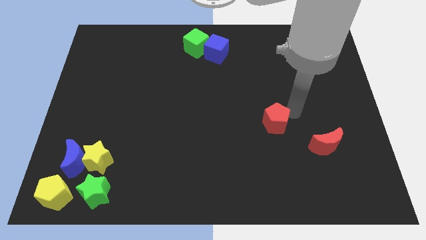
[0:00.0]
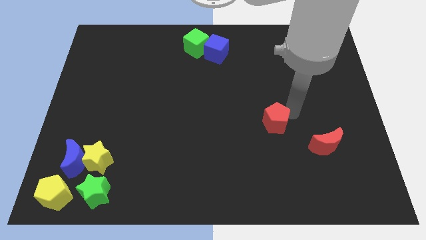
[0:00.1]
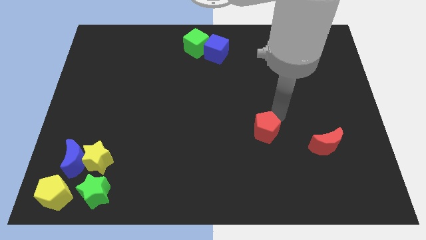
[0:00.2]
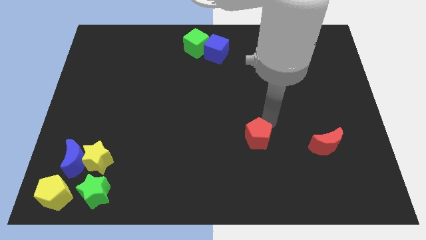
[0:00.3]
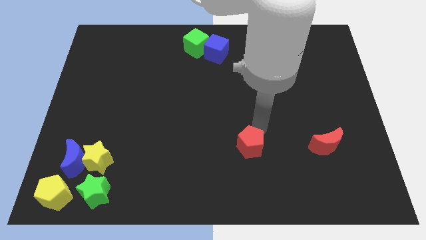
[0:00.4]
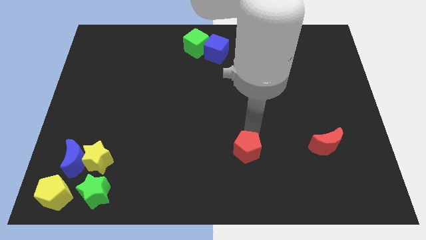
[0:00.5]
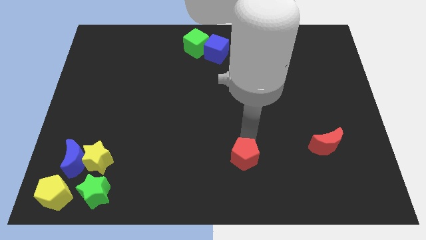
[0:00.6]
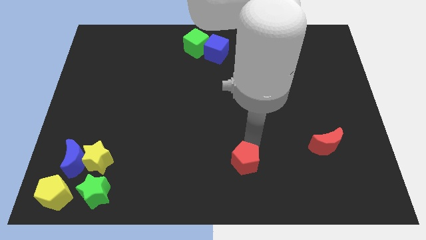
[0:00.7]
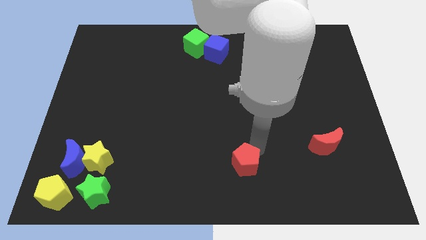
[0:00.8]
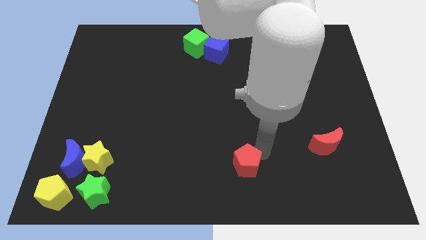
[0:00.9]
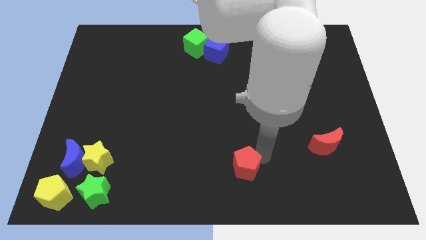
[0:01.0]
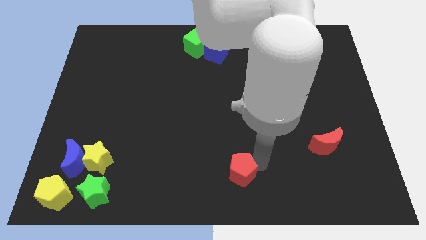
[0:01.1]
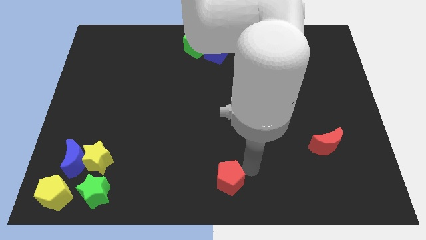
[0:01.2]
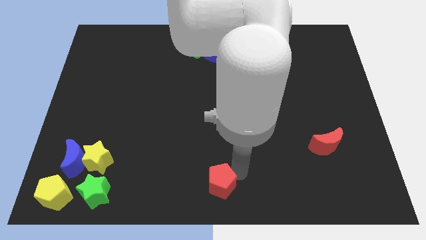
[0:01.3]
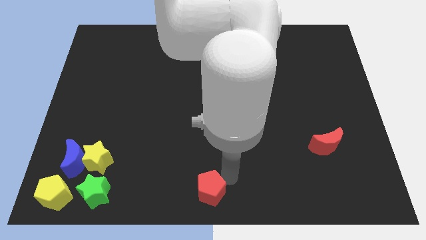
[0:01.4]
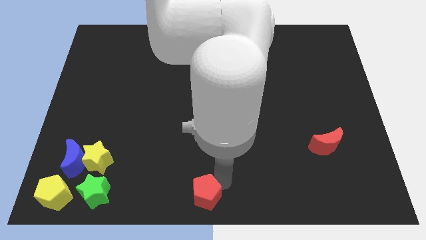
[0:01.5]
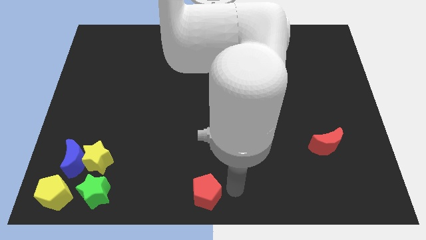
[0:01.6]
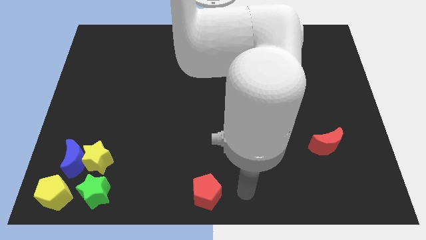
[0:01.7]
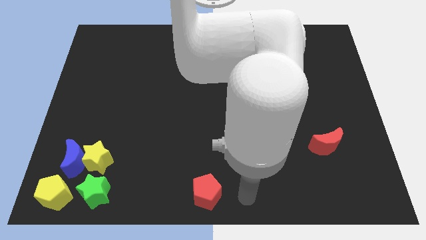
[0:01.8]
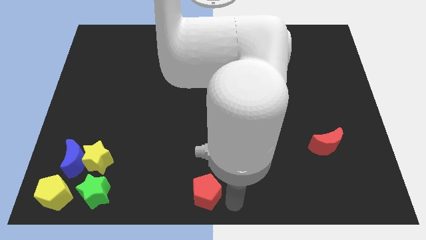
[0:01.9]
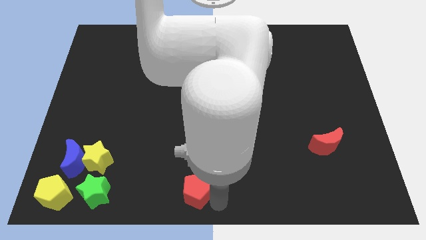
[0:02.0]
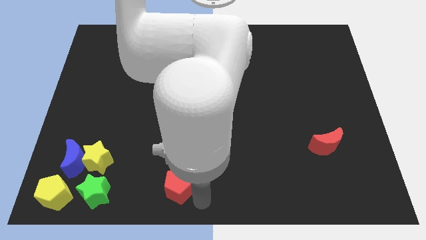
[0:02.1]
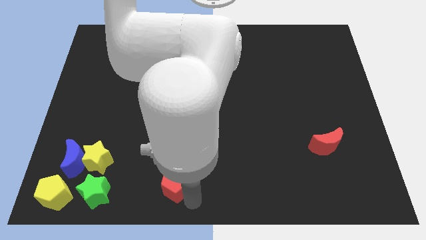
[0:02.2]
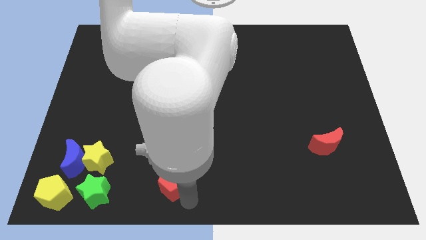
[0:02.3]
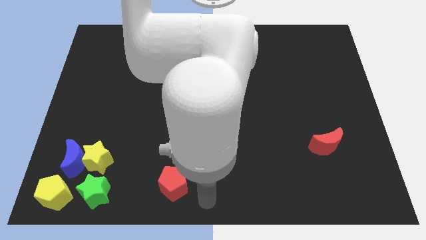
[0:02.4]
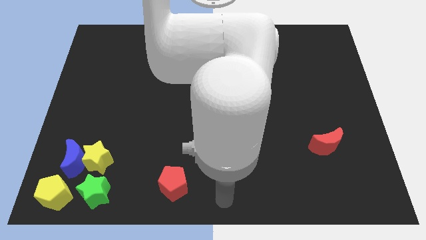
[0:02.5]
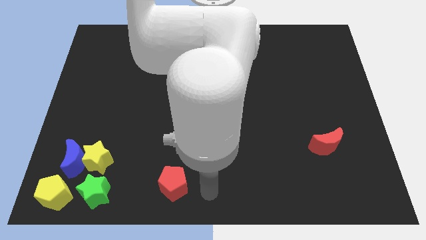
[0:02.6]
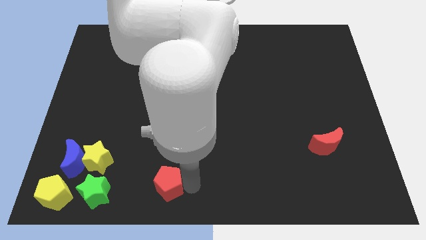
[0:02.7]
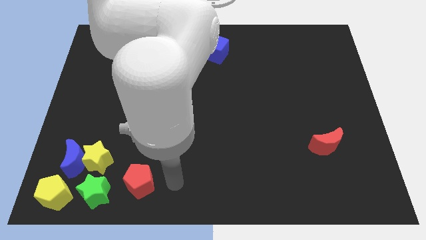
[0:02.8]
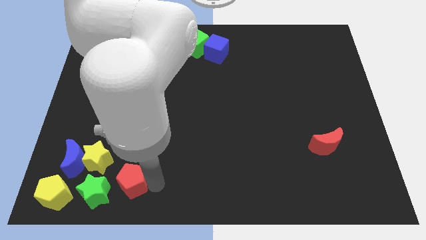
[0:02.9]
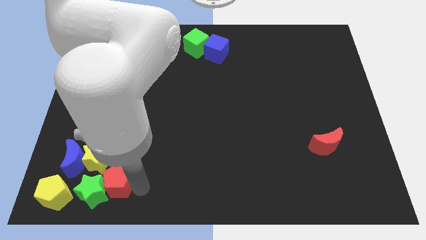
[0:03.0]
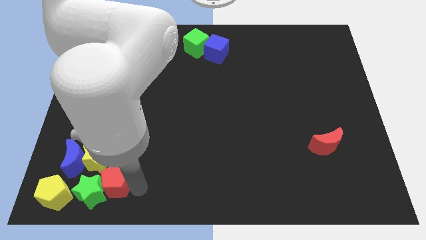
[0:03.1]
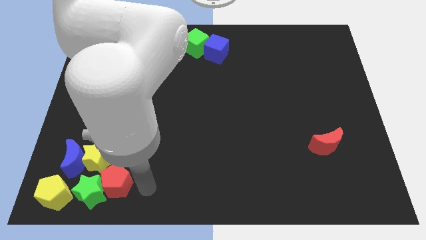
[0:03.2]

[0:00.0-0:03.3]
slide the red pentagon into the green star

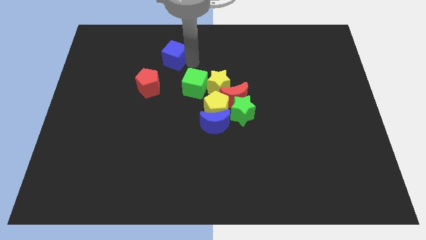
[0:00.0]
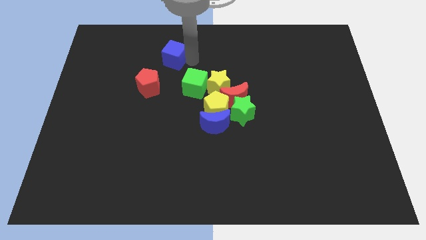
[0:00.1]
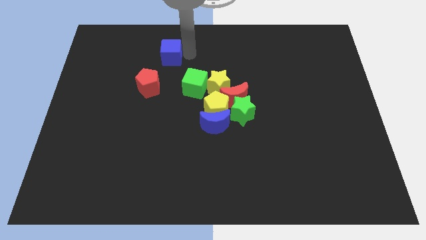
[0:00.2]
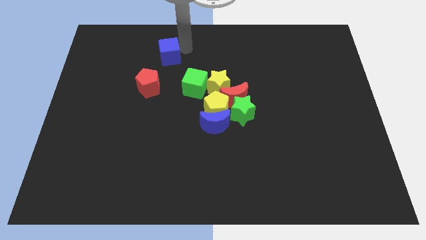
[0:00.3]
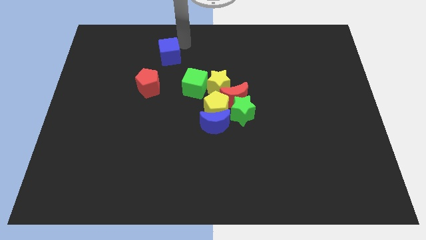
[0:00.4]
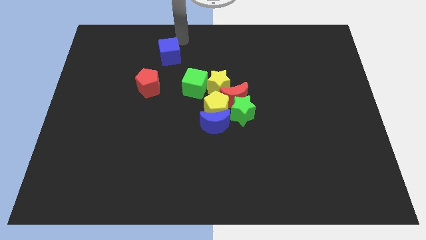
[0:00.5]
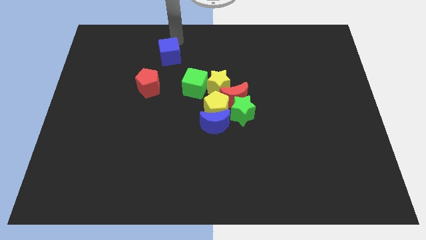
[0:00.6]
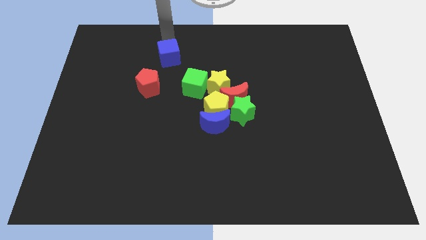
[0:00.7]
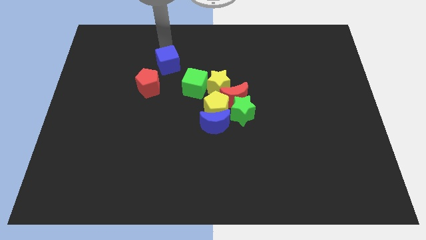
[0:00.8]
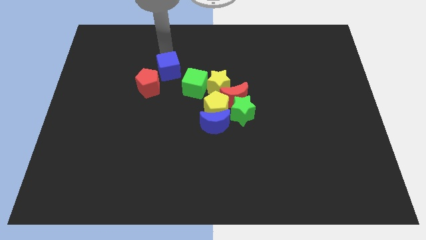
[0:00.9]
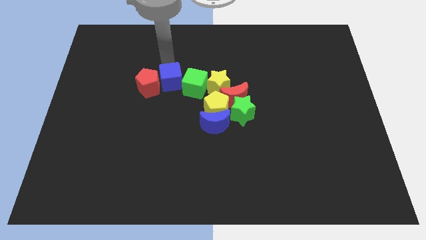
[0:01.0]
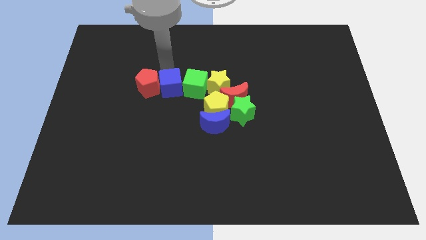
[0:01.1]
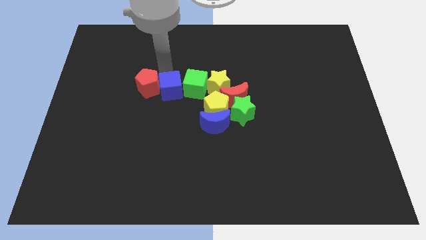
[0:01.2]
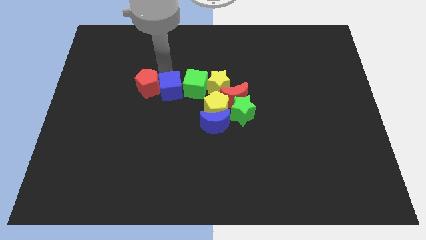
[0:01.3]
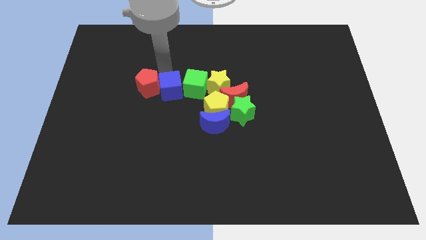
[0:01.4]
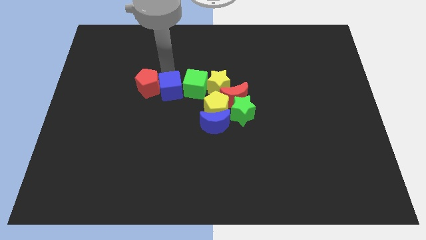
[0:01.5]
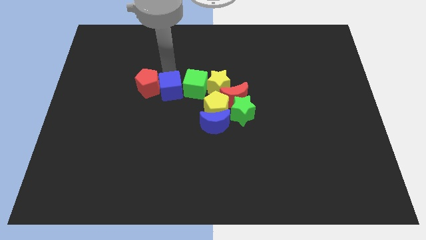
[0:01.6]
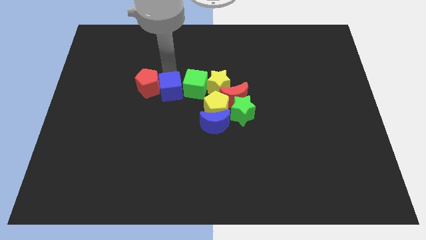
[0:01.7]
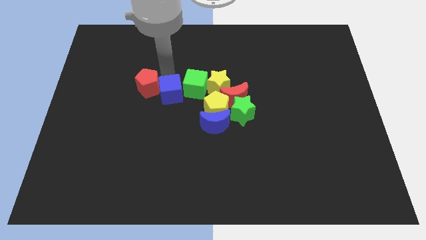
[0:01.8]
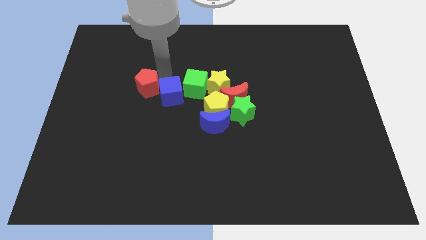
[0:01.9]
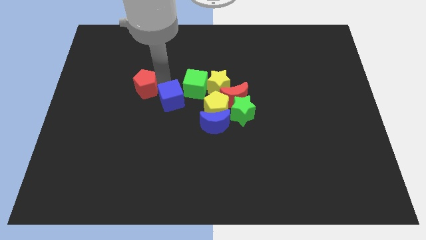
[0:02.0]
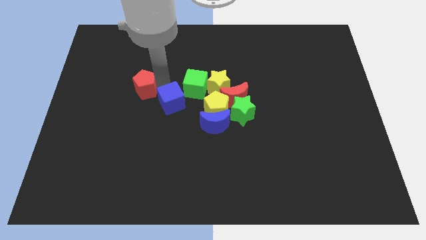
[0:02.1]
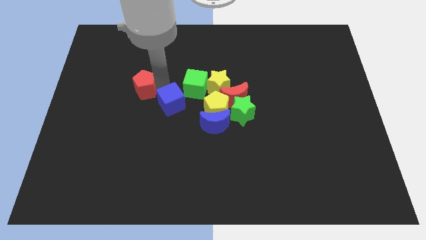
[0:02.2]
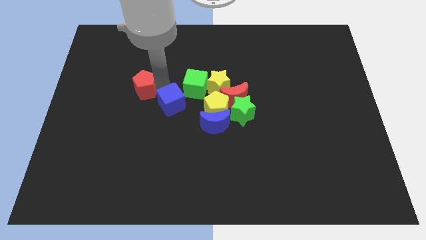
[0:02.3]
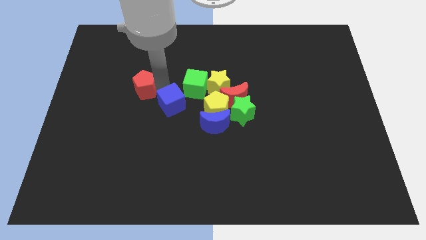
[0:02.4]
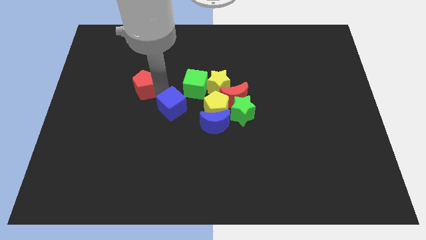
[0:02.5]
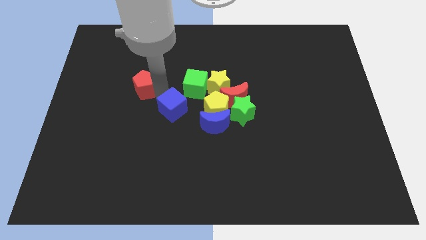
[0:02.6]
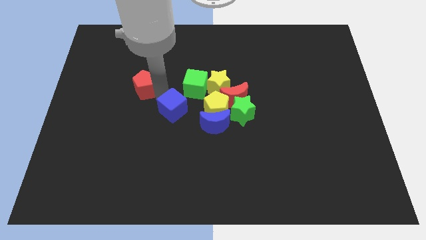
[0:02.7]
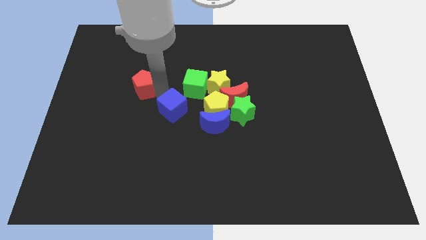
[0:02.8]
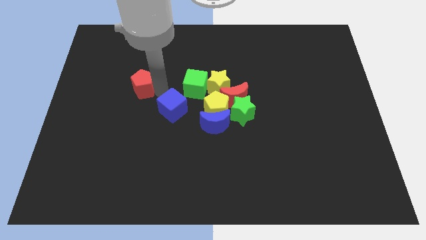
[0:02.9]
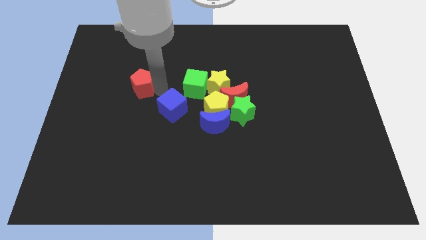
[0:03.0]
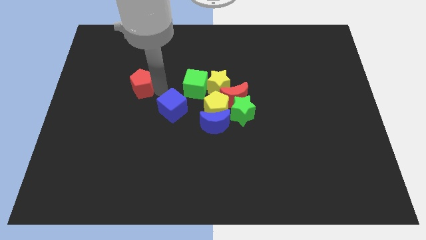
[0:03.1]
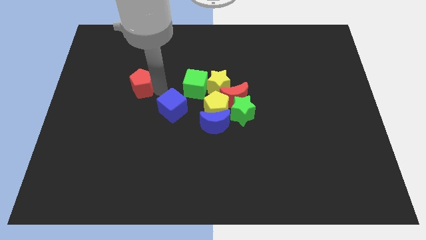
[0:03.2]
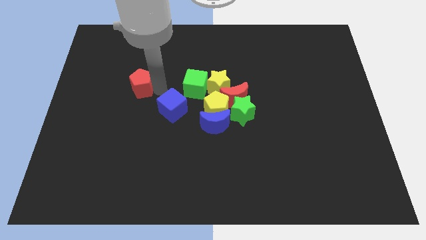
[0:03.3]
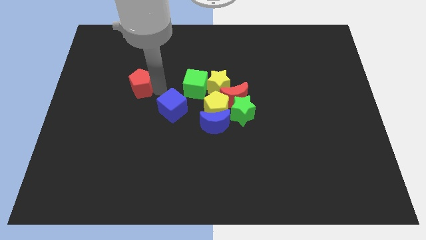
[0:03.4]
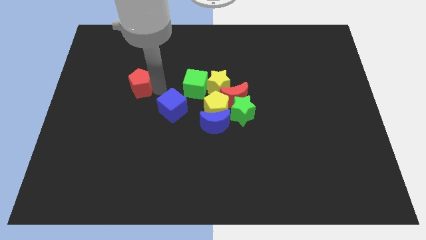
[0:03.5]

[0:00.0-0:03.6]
move blue cube to the diagonal bottom left of the green cube

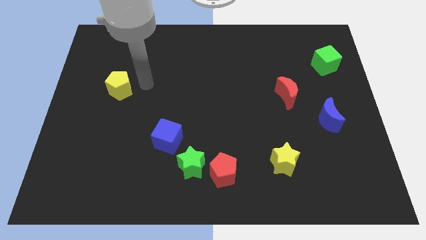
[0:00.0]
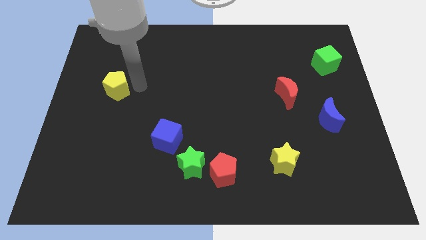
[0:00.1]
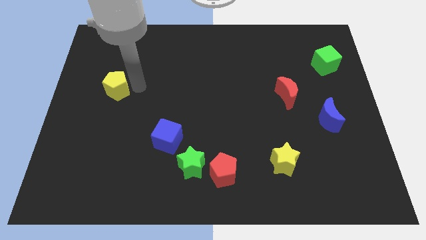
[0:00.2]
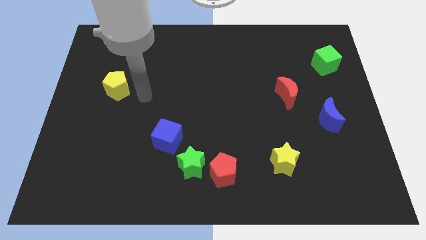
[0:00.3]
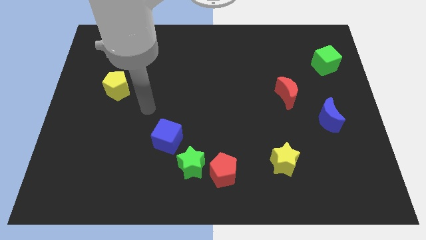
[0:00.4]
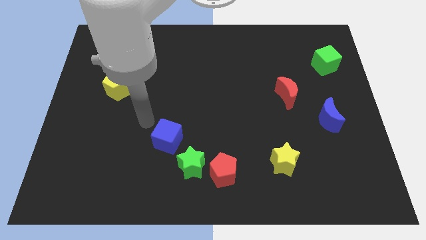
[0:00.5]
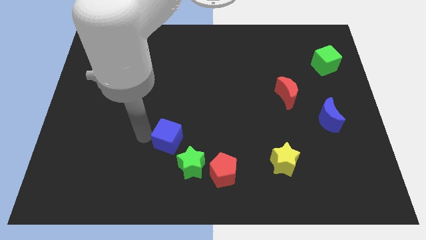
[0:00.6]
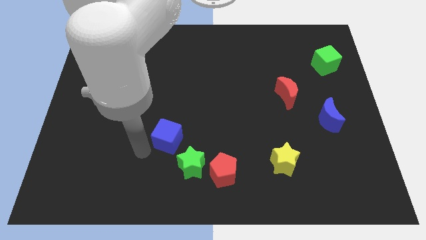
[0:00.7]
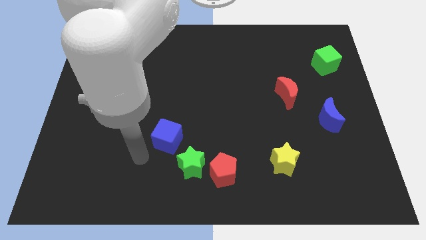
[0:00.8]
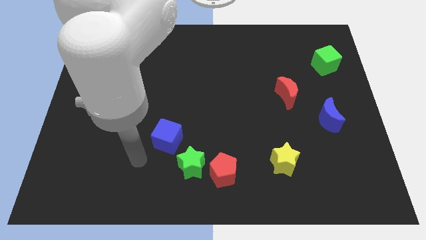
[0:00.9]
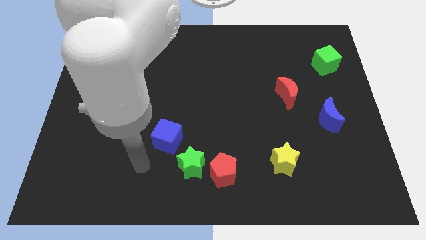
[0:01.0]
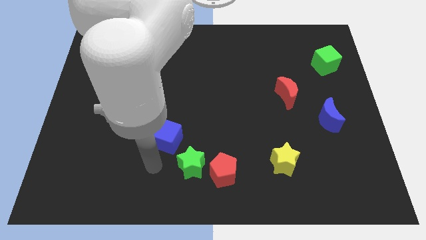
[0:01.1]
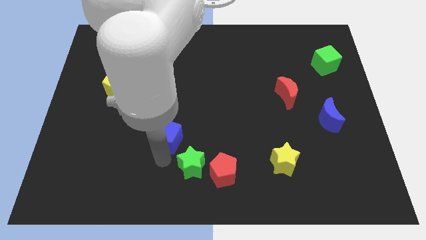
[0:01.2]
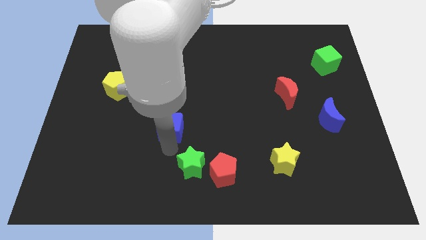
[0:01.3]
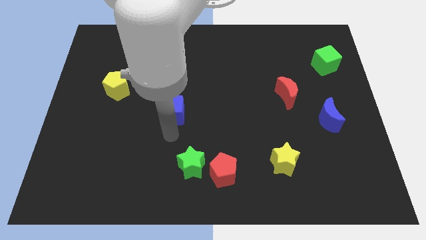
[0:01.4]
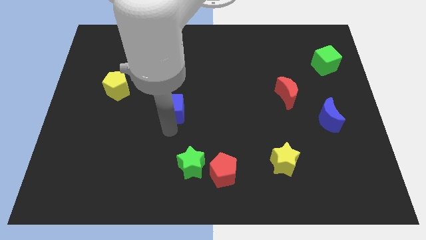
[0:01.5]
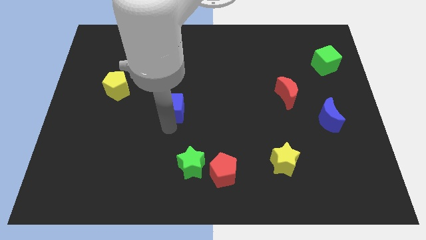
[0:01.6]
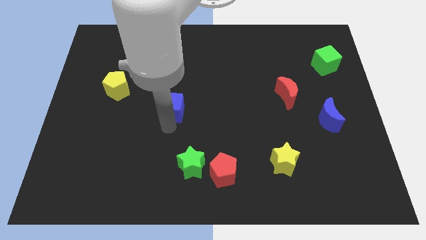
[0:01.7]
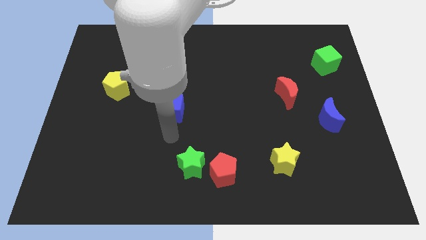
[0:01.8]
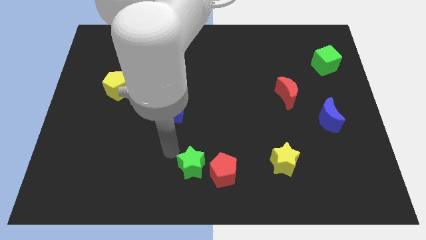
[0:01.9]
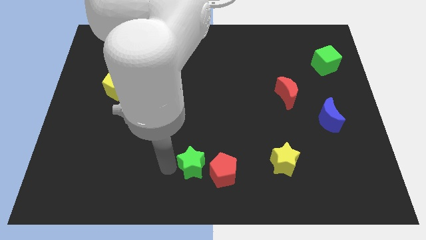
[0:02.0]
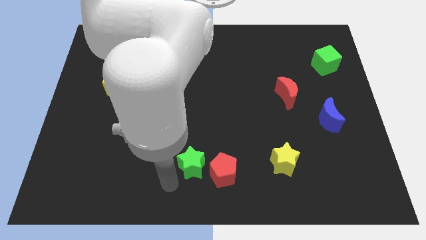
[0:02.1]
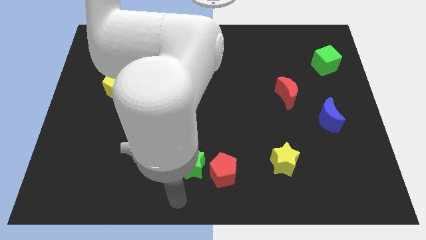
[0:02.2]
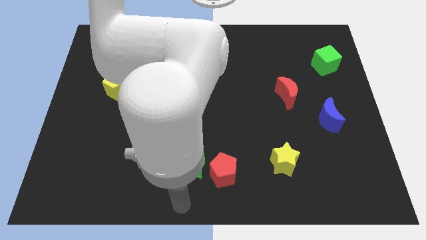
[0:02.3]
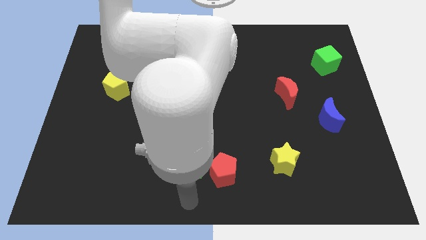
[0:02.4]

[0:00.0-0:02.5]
place the blue cube diagonally to yellow pentagon
